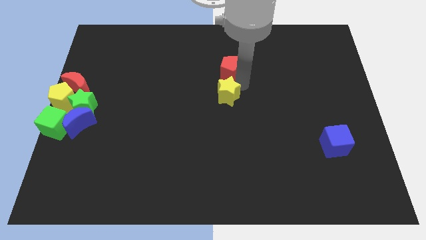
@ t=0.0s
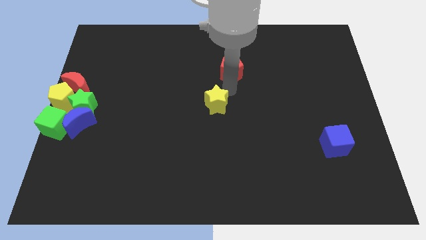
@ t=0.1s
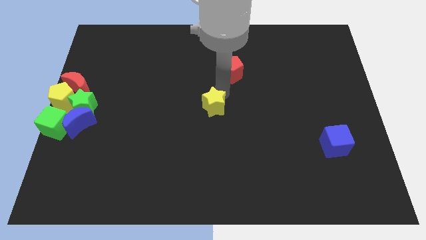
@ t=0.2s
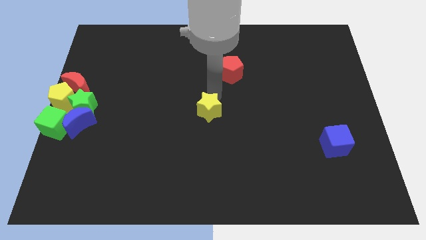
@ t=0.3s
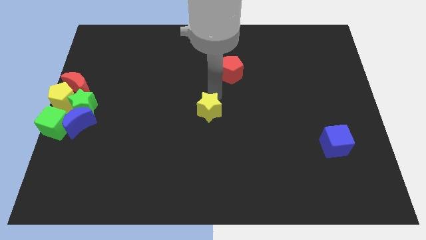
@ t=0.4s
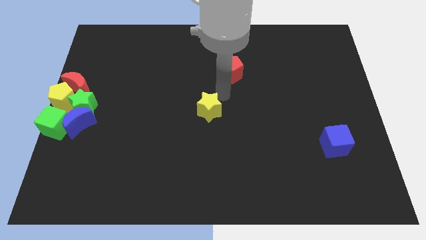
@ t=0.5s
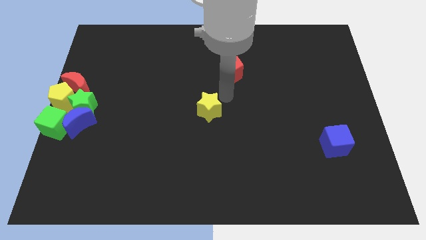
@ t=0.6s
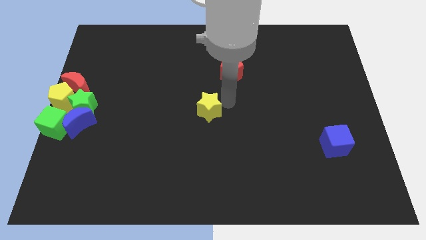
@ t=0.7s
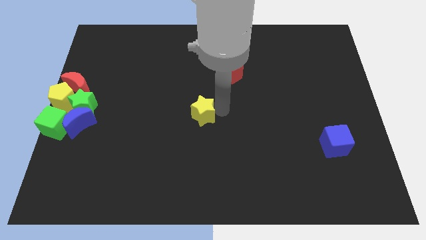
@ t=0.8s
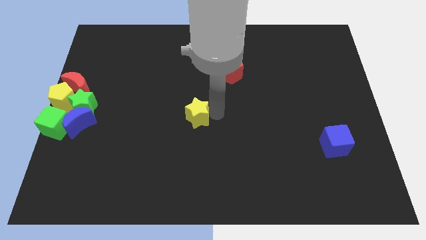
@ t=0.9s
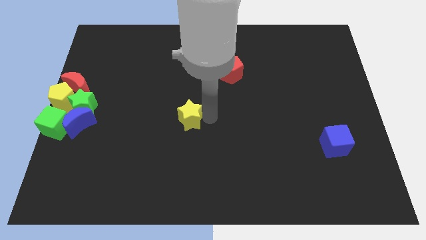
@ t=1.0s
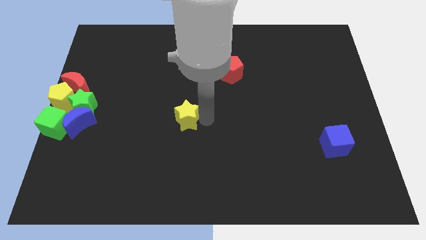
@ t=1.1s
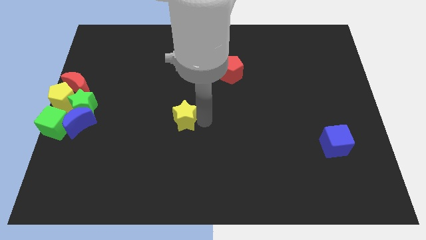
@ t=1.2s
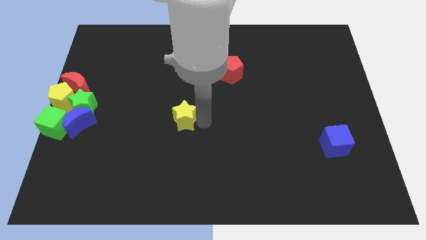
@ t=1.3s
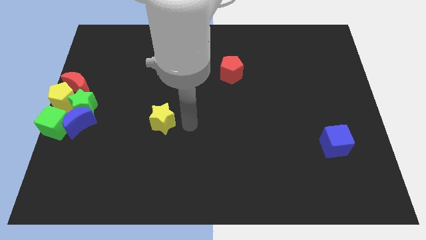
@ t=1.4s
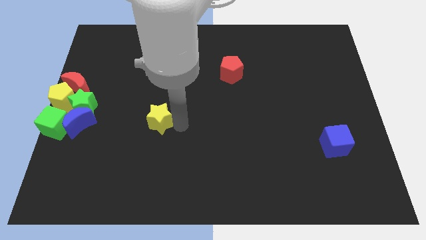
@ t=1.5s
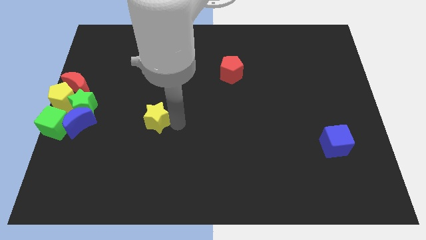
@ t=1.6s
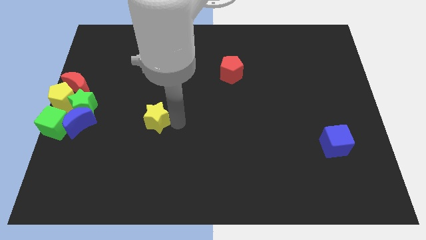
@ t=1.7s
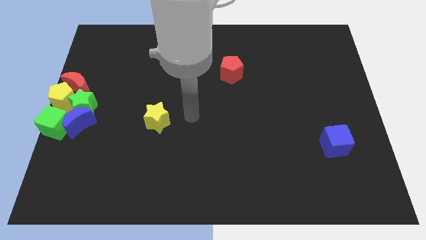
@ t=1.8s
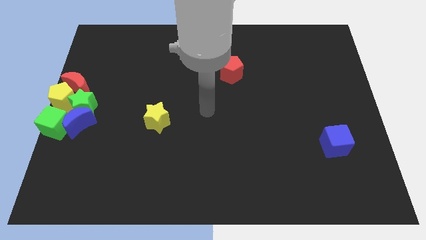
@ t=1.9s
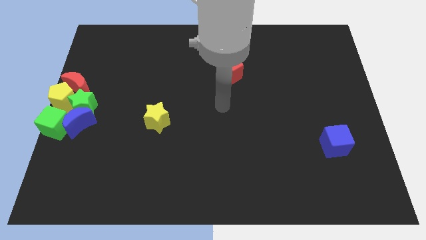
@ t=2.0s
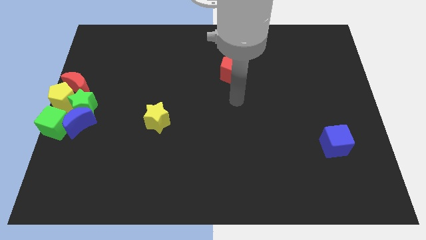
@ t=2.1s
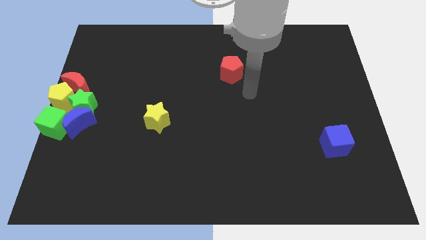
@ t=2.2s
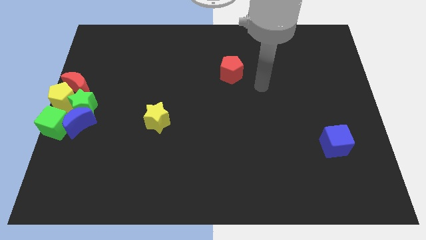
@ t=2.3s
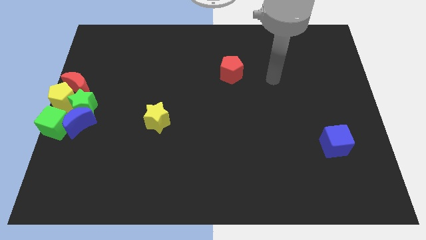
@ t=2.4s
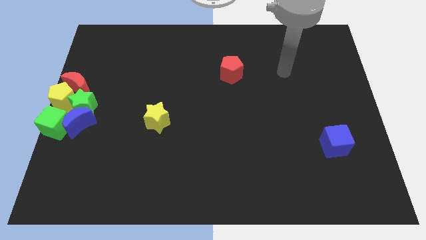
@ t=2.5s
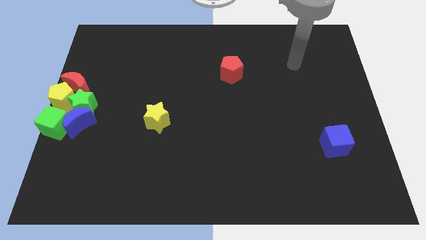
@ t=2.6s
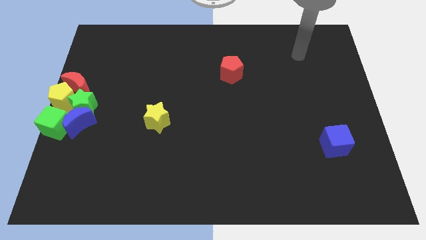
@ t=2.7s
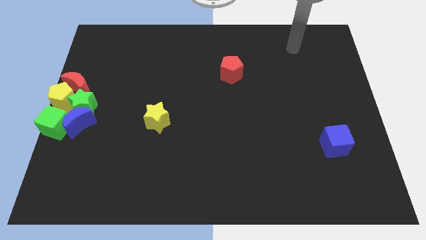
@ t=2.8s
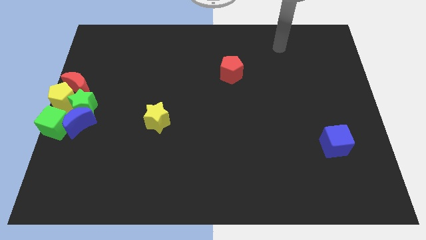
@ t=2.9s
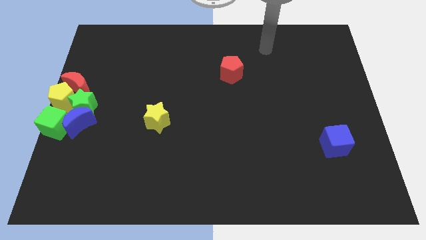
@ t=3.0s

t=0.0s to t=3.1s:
place the yellow star diagonally bottom left to the red pentagon

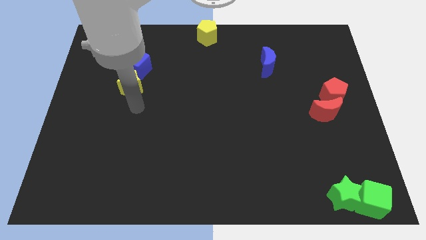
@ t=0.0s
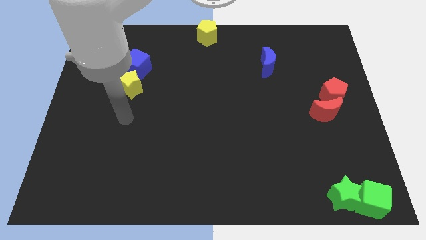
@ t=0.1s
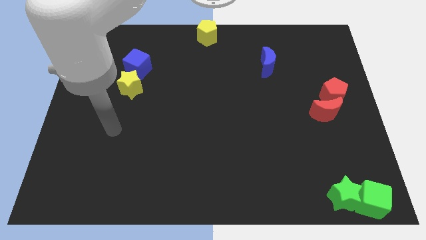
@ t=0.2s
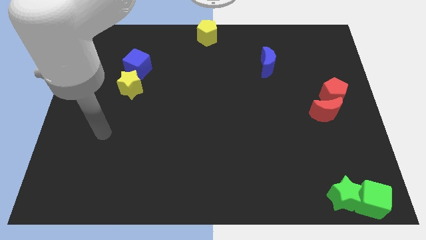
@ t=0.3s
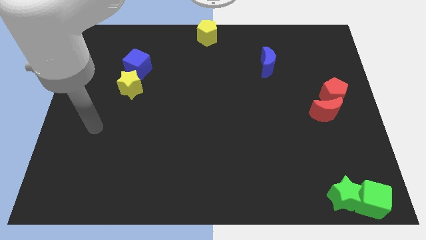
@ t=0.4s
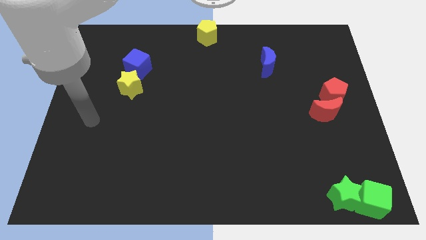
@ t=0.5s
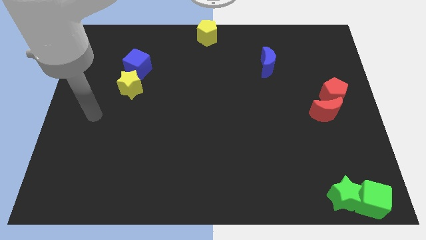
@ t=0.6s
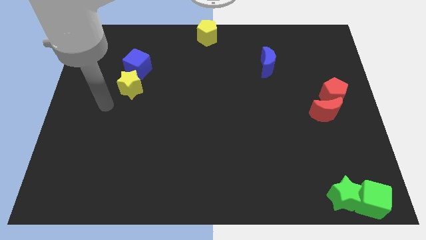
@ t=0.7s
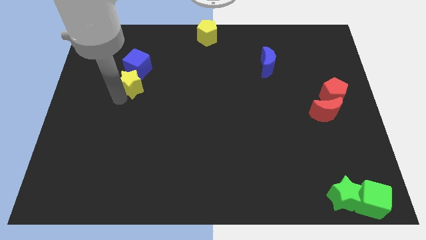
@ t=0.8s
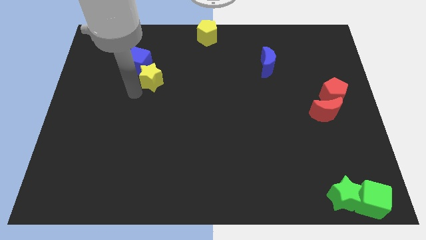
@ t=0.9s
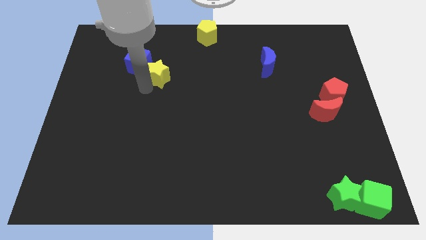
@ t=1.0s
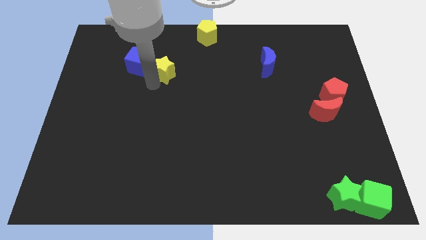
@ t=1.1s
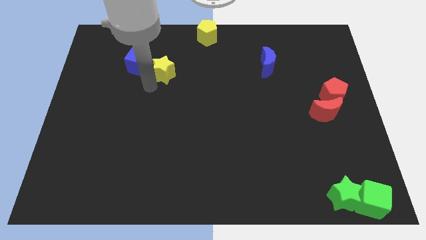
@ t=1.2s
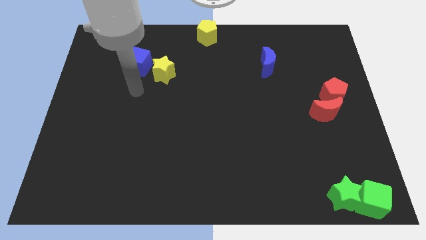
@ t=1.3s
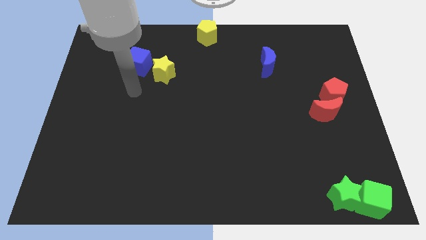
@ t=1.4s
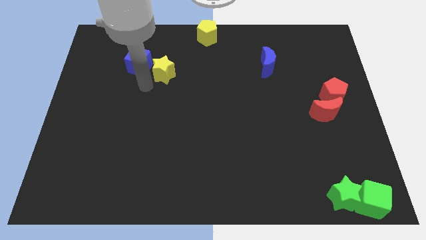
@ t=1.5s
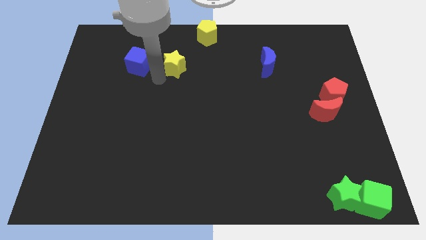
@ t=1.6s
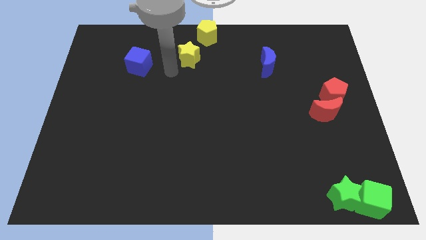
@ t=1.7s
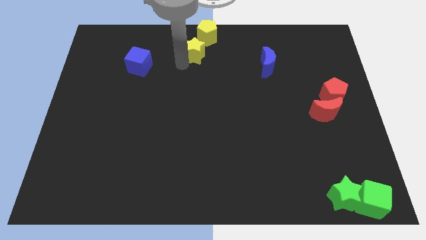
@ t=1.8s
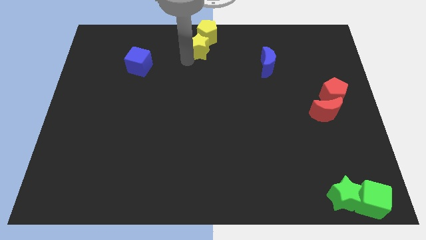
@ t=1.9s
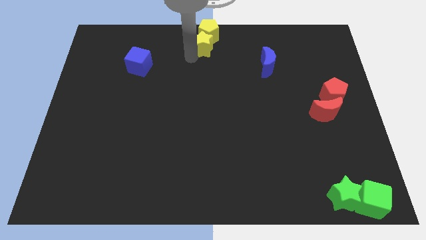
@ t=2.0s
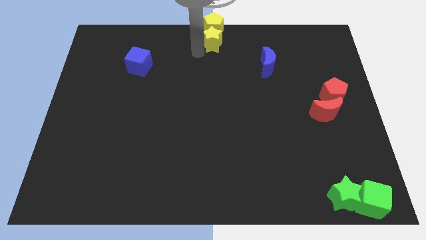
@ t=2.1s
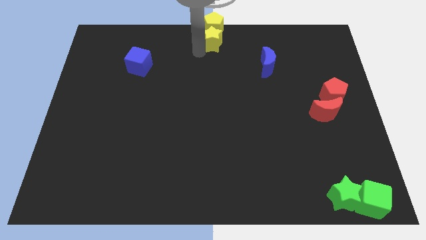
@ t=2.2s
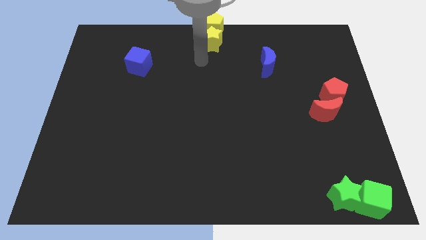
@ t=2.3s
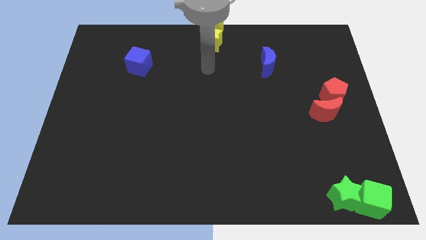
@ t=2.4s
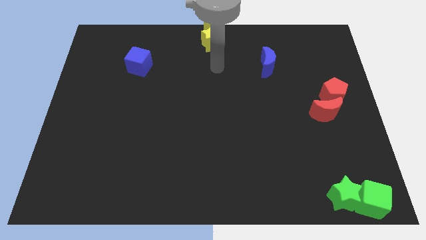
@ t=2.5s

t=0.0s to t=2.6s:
separate the blue cube and yellow star

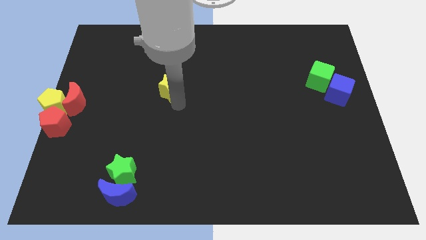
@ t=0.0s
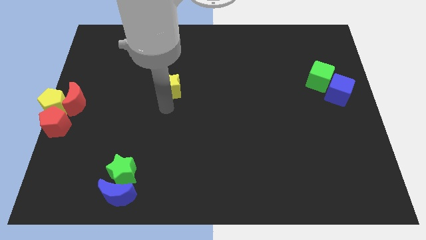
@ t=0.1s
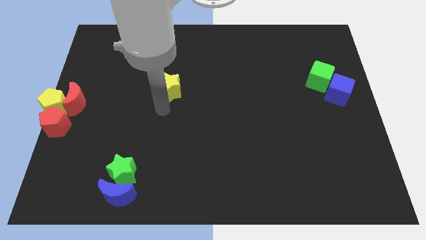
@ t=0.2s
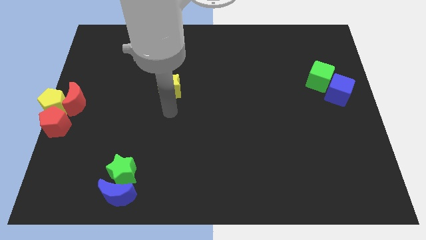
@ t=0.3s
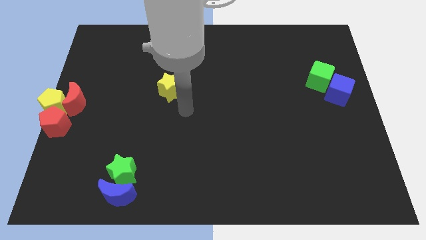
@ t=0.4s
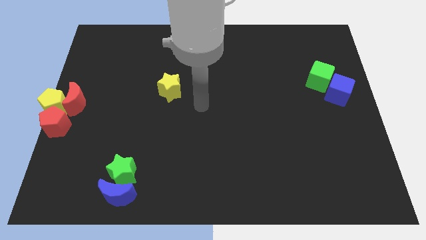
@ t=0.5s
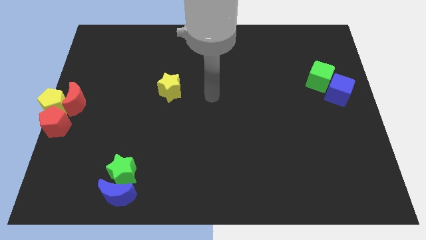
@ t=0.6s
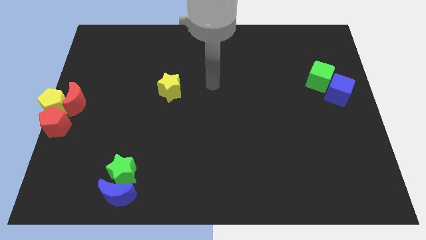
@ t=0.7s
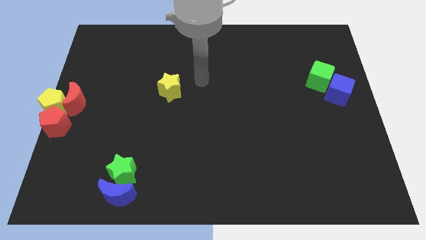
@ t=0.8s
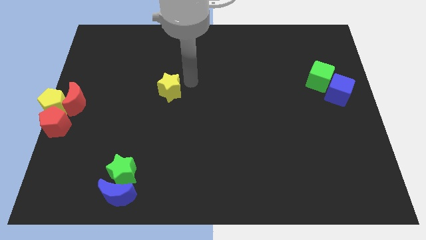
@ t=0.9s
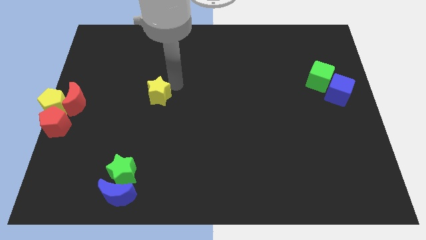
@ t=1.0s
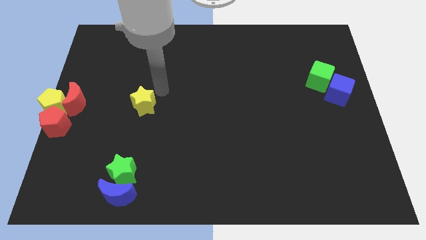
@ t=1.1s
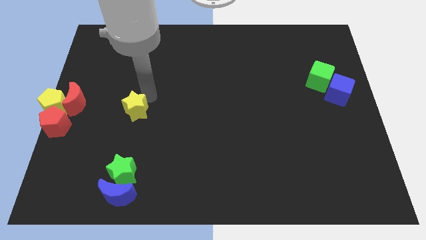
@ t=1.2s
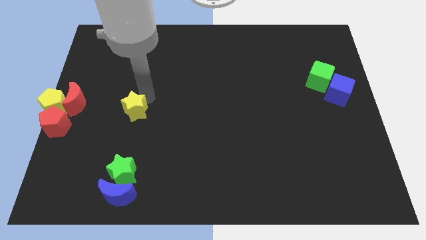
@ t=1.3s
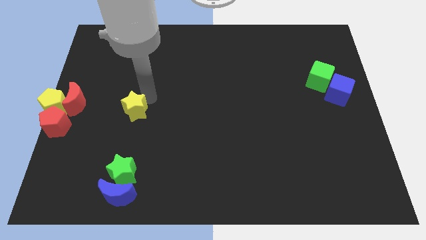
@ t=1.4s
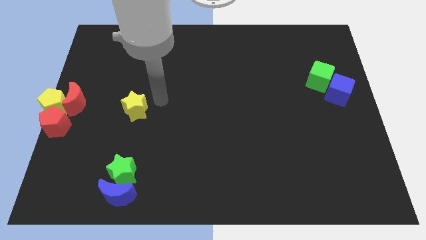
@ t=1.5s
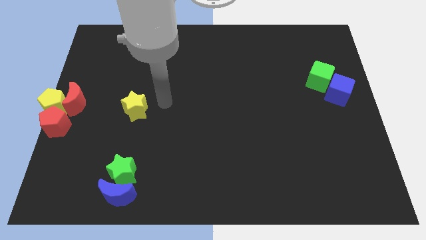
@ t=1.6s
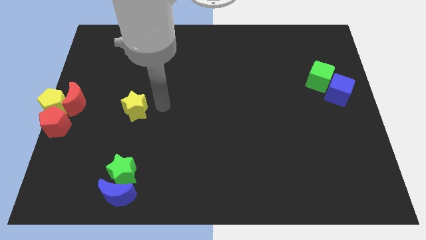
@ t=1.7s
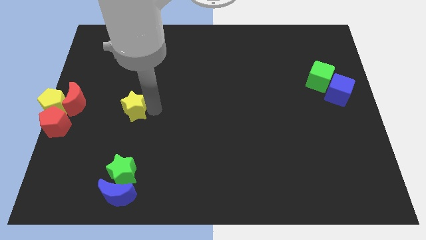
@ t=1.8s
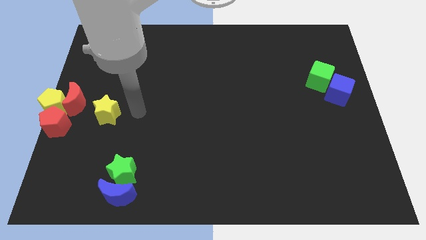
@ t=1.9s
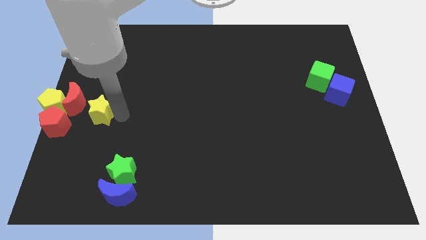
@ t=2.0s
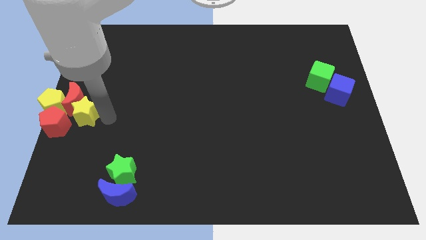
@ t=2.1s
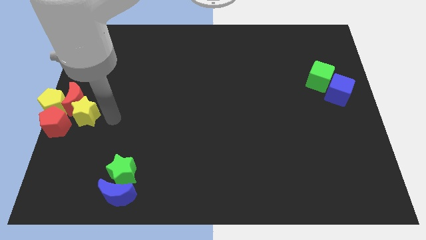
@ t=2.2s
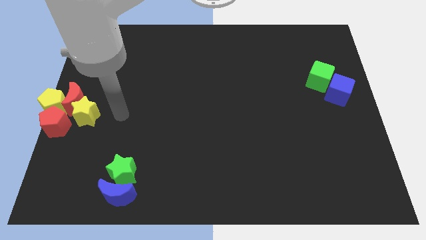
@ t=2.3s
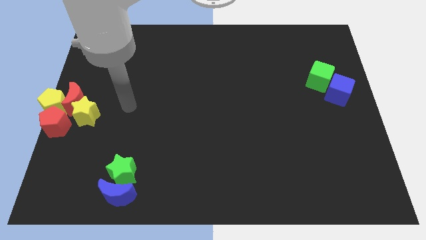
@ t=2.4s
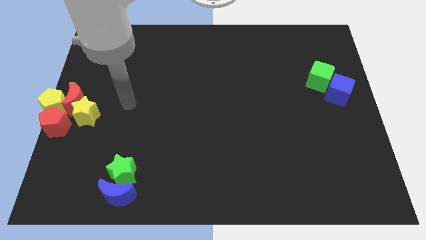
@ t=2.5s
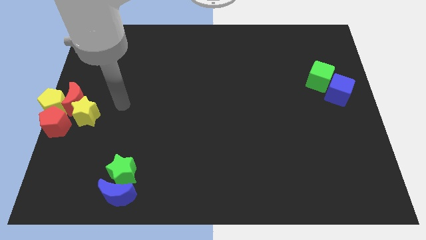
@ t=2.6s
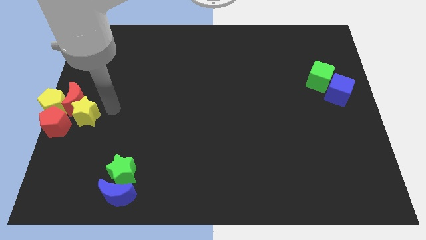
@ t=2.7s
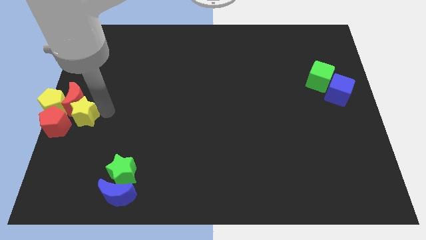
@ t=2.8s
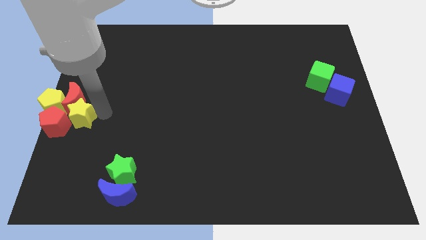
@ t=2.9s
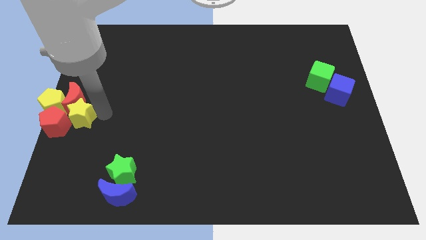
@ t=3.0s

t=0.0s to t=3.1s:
drag the yellow star into the group of blocks
